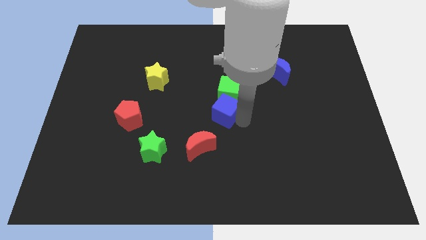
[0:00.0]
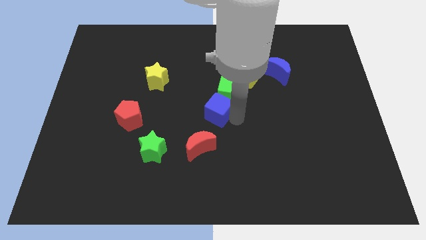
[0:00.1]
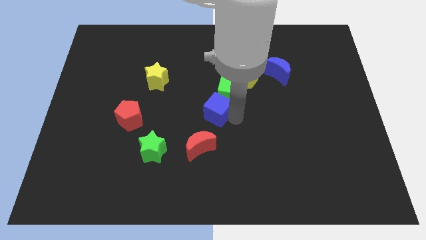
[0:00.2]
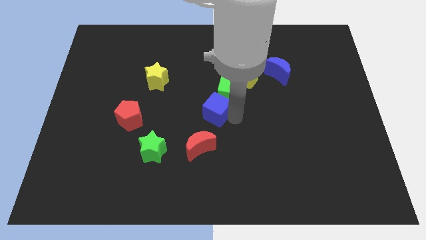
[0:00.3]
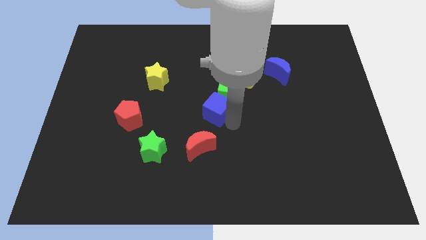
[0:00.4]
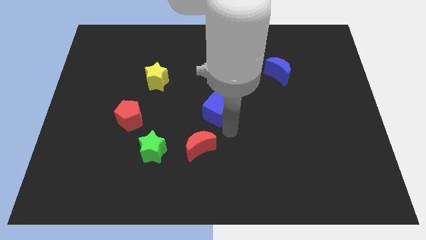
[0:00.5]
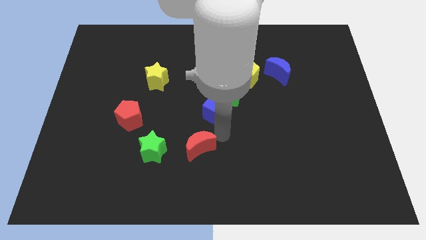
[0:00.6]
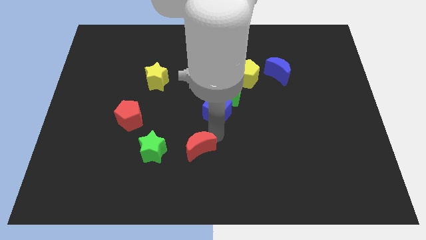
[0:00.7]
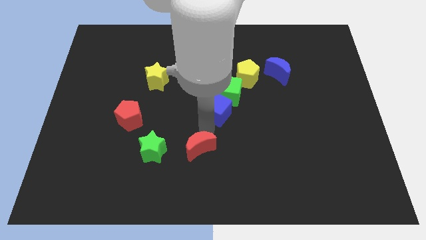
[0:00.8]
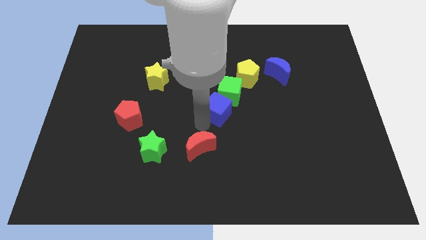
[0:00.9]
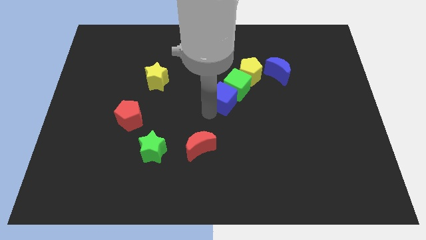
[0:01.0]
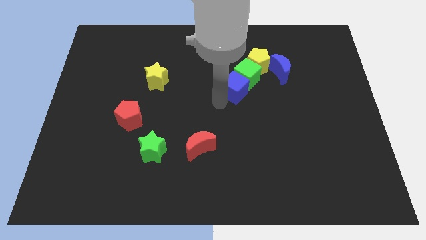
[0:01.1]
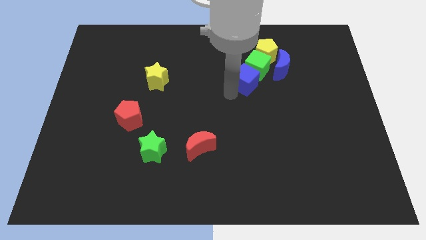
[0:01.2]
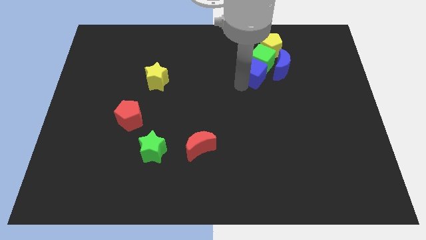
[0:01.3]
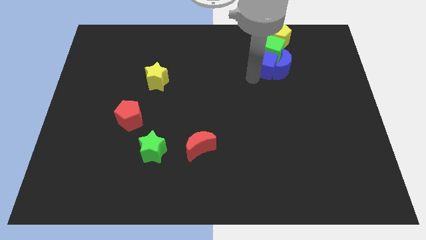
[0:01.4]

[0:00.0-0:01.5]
push the blue blocksgreen cube and the yellow pentagon towards the top right

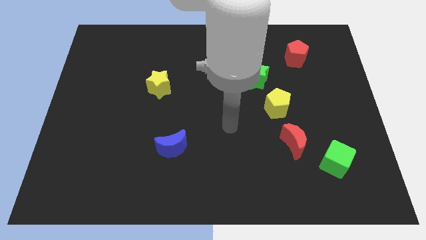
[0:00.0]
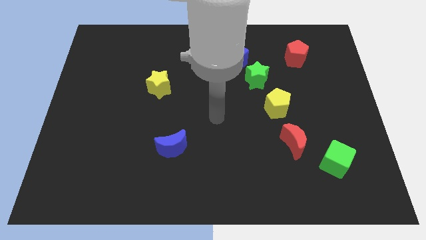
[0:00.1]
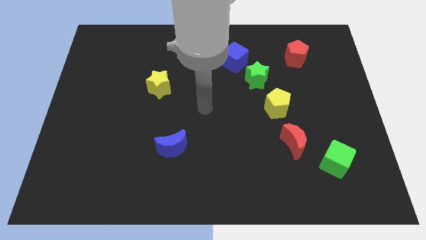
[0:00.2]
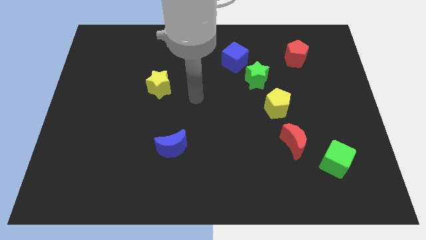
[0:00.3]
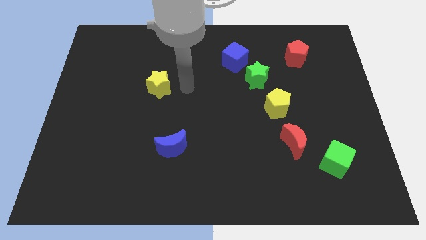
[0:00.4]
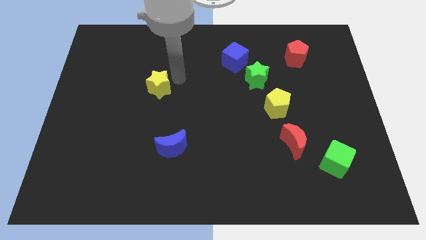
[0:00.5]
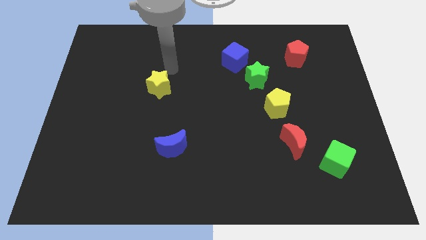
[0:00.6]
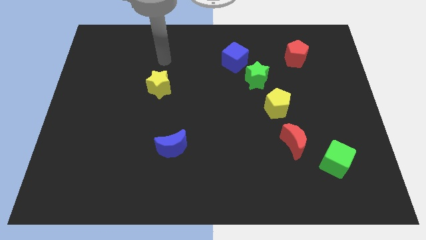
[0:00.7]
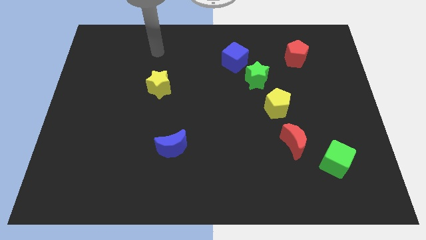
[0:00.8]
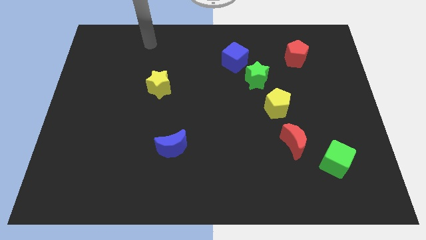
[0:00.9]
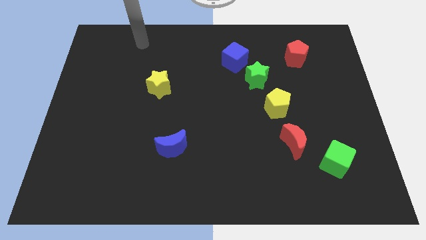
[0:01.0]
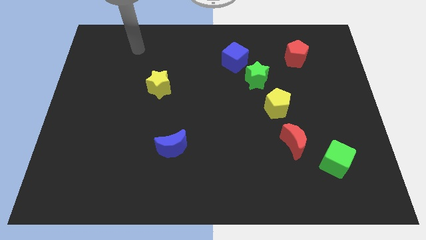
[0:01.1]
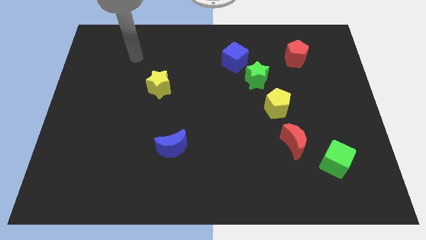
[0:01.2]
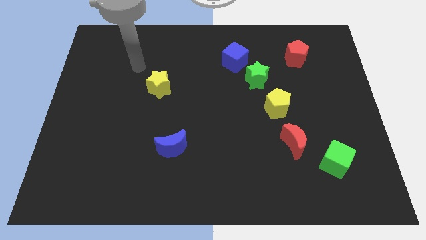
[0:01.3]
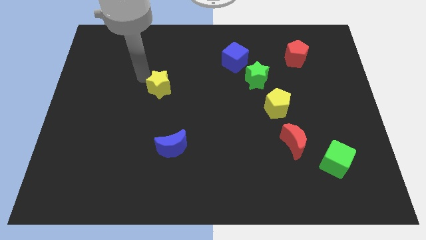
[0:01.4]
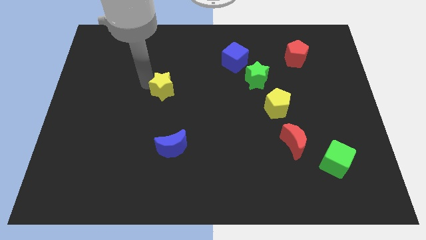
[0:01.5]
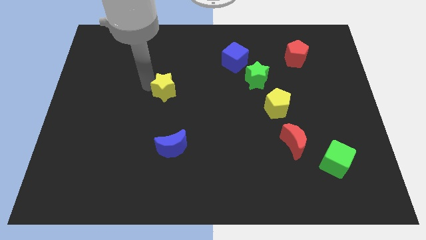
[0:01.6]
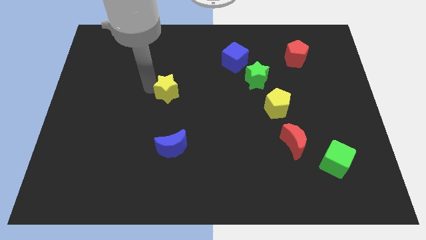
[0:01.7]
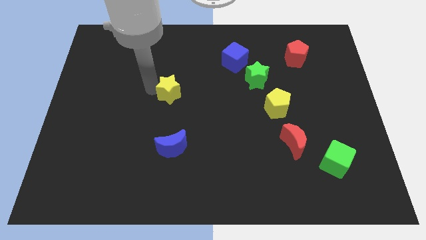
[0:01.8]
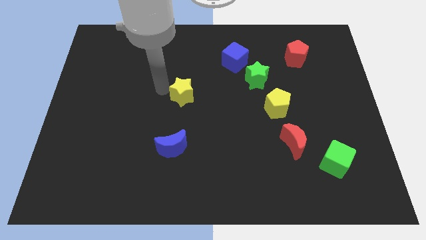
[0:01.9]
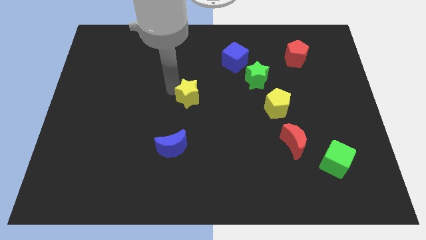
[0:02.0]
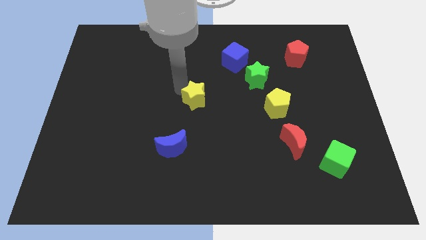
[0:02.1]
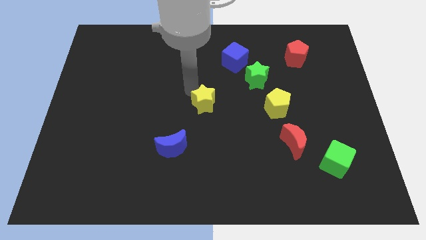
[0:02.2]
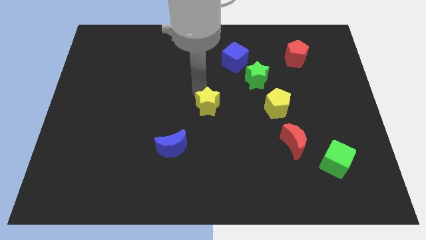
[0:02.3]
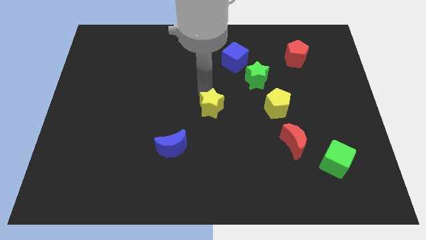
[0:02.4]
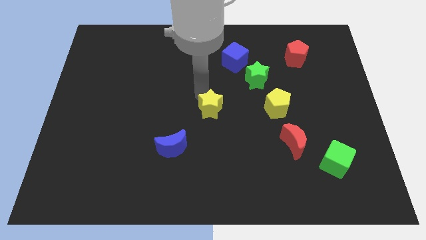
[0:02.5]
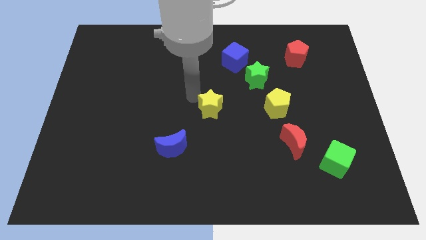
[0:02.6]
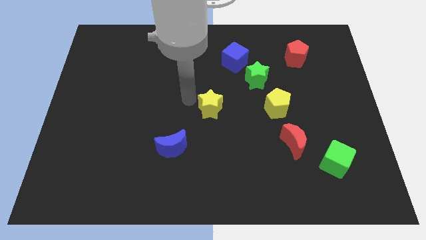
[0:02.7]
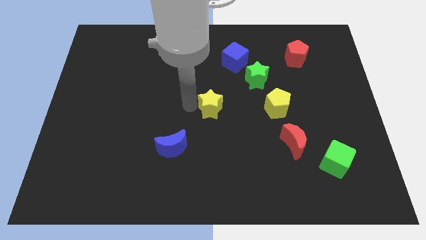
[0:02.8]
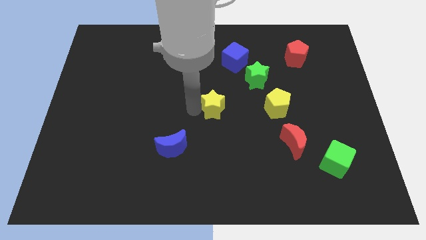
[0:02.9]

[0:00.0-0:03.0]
push the yellow star towards the bottom side of the board

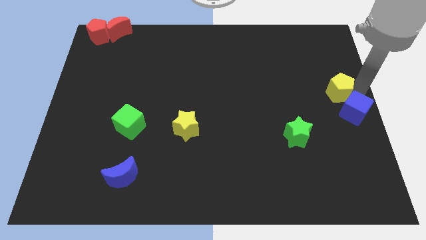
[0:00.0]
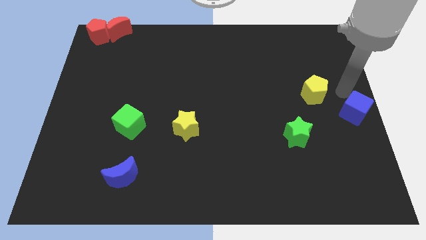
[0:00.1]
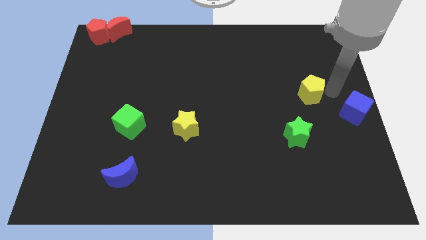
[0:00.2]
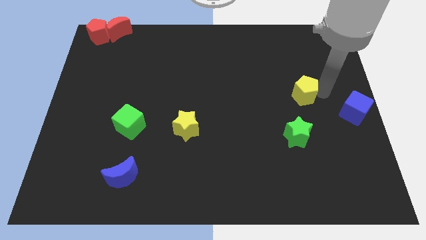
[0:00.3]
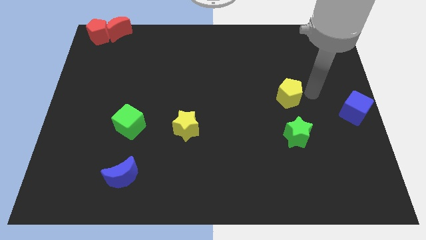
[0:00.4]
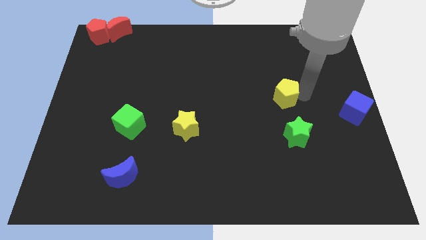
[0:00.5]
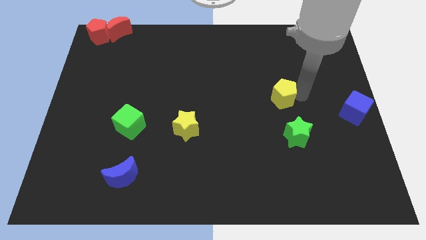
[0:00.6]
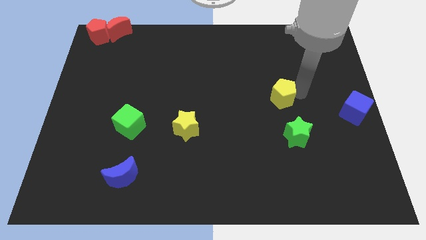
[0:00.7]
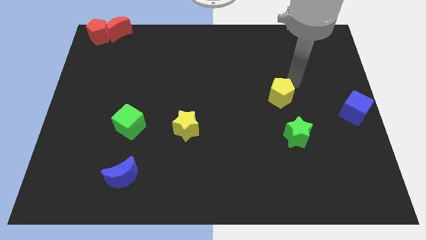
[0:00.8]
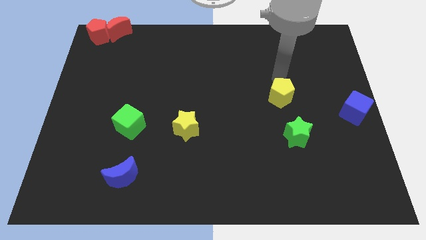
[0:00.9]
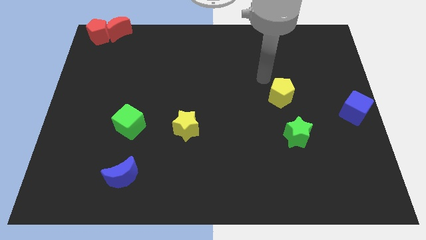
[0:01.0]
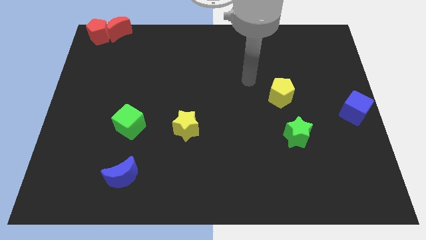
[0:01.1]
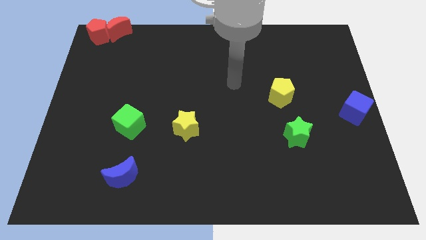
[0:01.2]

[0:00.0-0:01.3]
place yellow pentagon above green star

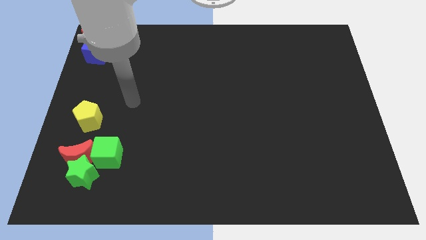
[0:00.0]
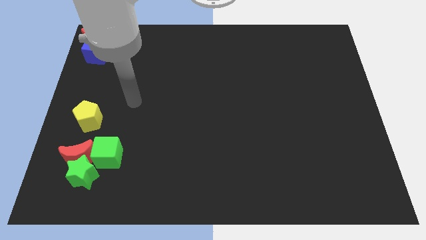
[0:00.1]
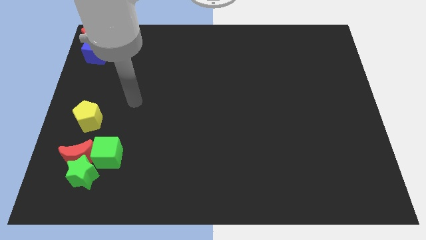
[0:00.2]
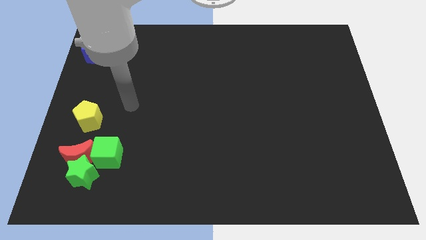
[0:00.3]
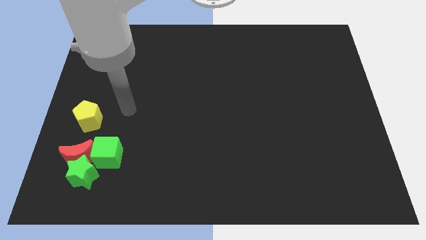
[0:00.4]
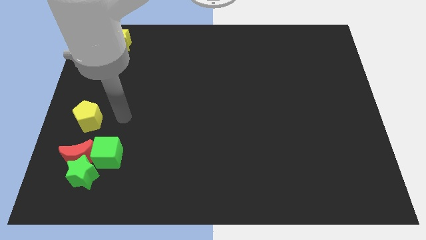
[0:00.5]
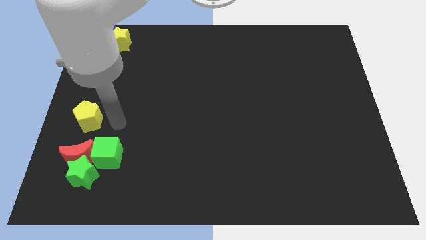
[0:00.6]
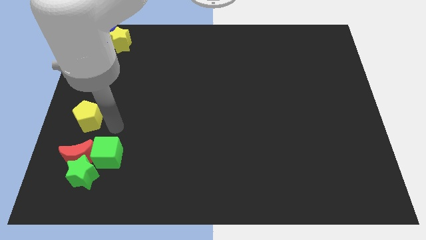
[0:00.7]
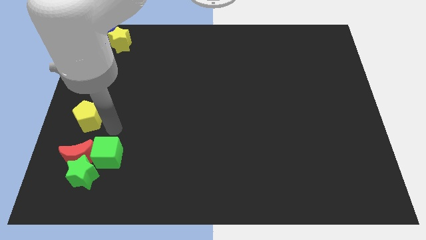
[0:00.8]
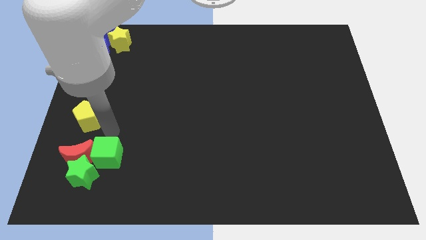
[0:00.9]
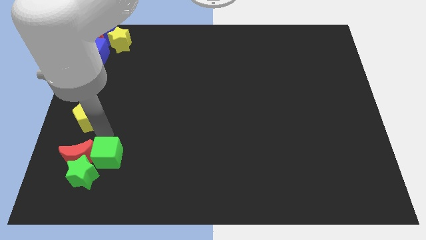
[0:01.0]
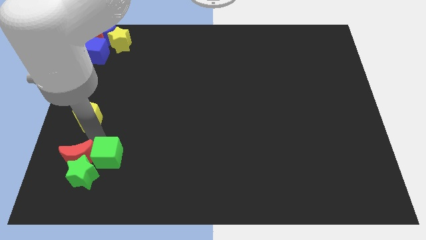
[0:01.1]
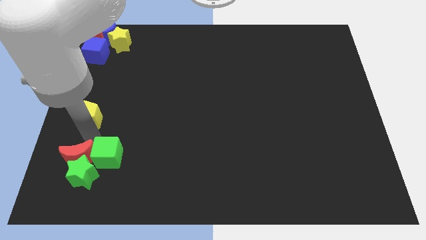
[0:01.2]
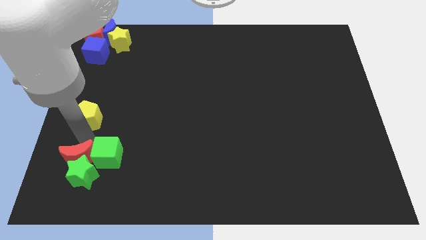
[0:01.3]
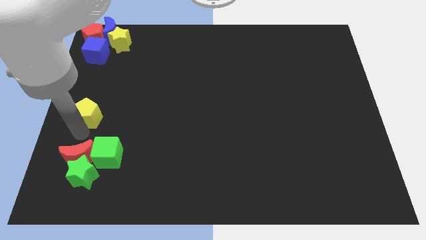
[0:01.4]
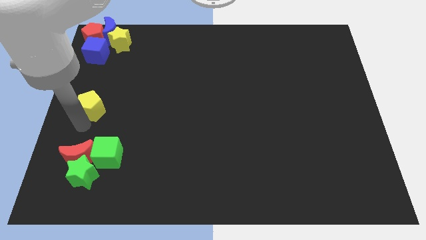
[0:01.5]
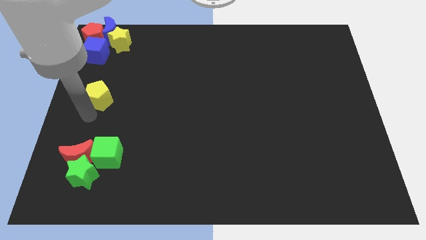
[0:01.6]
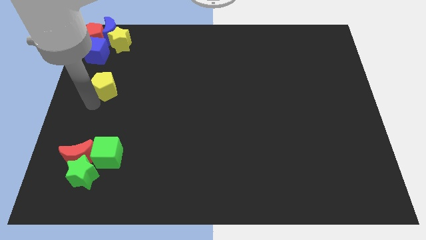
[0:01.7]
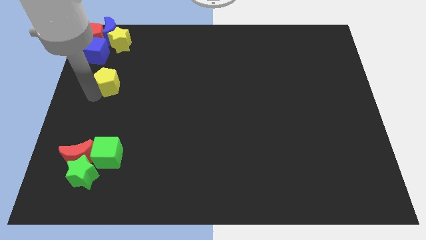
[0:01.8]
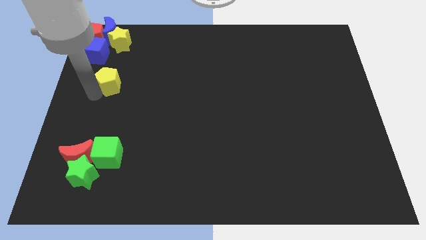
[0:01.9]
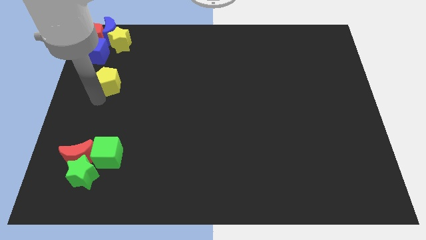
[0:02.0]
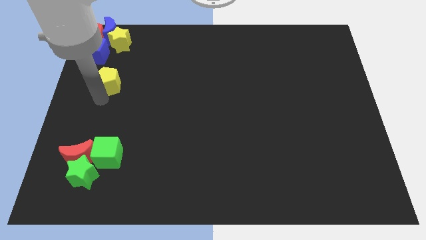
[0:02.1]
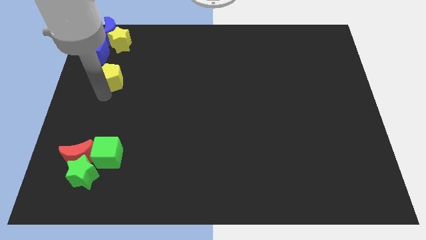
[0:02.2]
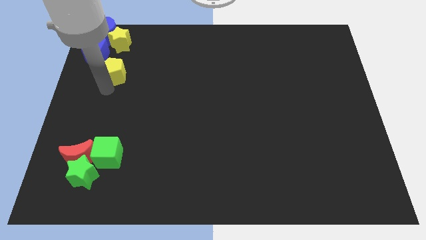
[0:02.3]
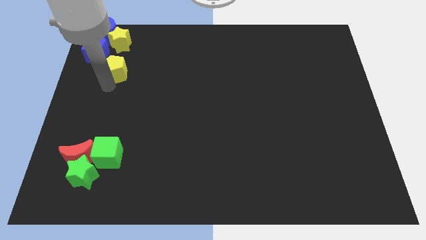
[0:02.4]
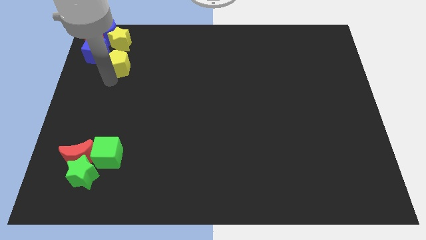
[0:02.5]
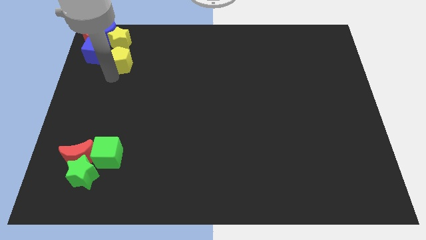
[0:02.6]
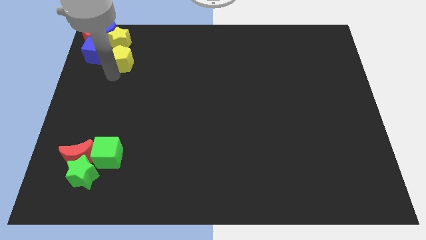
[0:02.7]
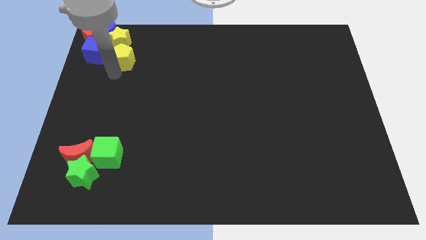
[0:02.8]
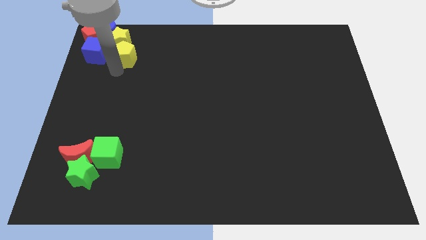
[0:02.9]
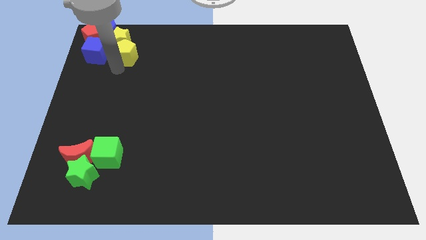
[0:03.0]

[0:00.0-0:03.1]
place the yellow pentagon to the bottom of the yellow star
